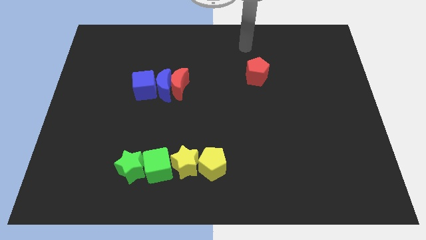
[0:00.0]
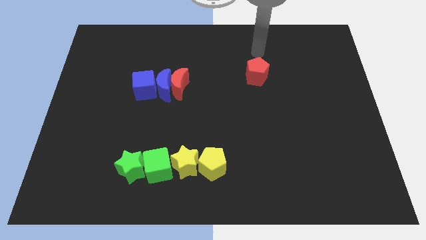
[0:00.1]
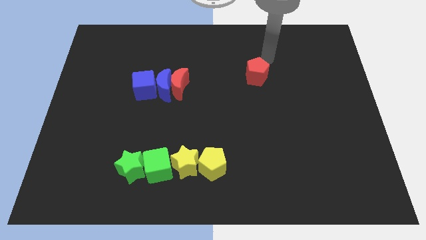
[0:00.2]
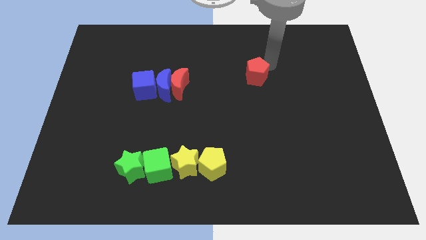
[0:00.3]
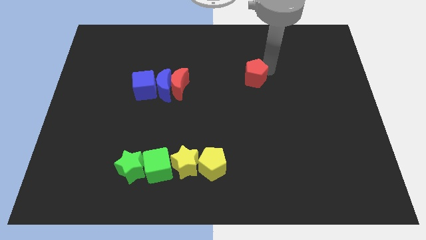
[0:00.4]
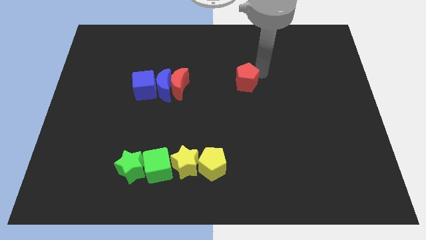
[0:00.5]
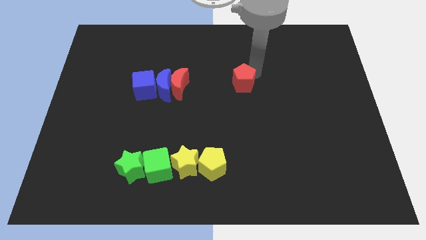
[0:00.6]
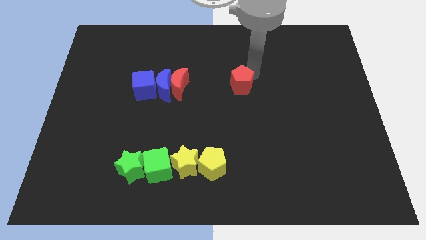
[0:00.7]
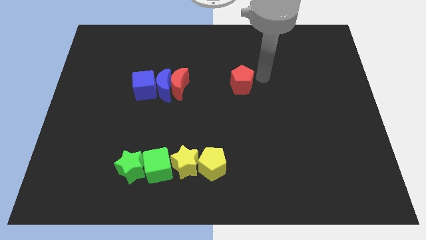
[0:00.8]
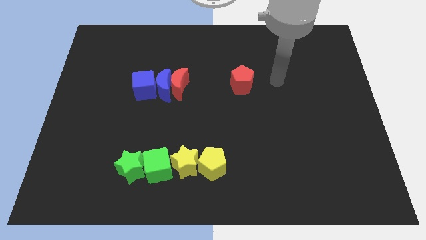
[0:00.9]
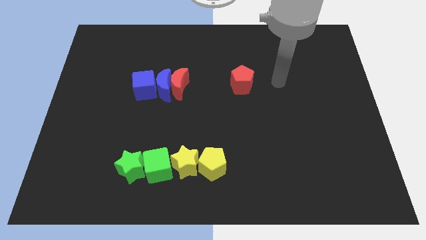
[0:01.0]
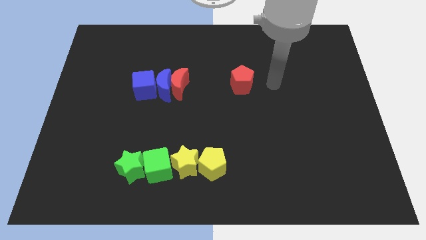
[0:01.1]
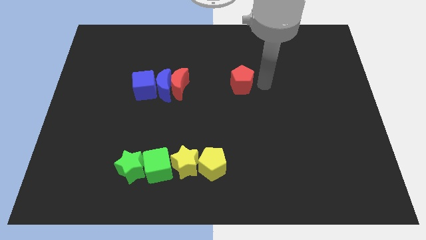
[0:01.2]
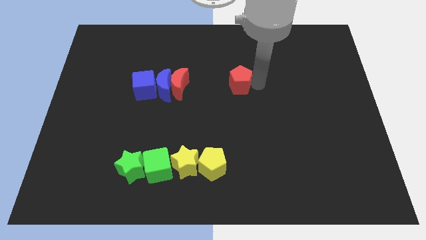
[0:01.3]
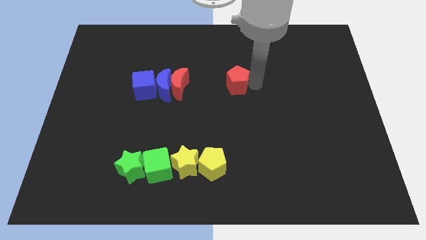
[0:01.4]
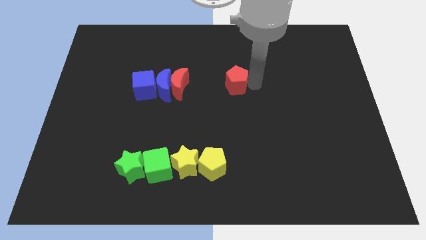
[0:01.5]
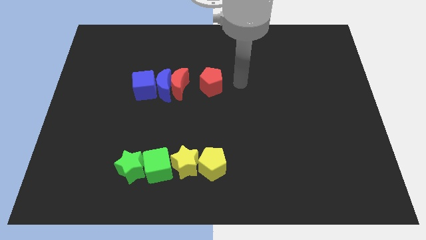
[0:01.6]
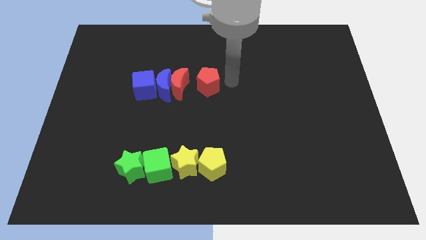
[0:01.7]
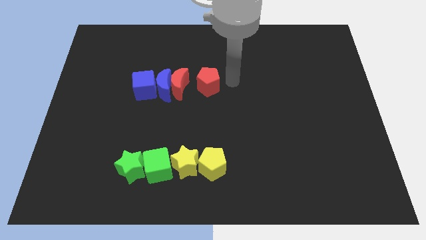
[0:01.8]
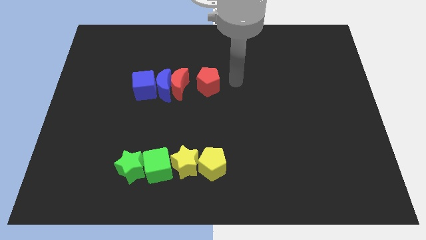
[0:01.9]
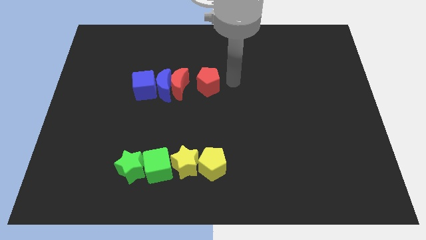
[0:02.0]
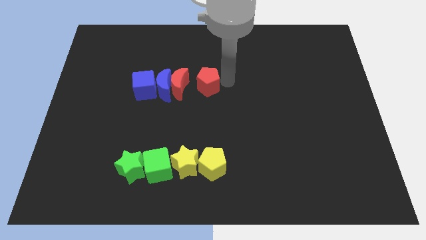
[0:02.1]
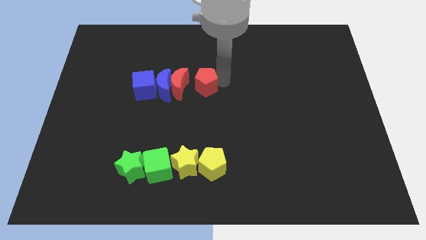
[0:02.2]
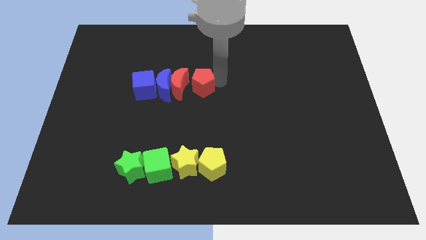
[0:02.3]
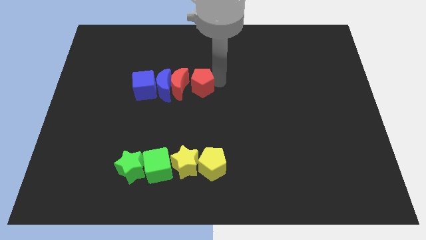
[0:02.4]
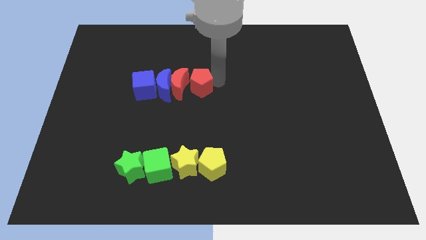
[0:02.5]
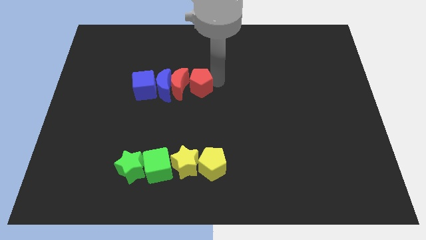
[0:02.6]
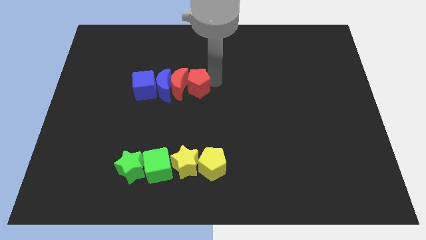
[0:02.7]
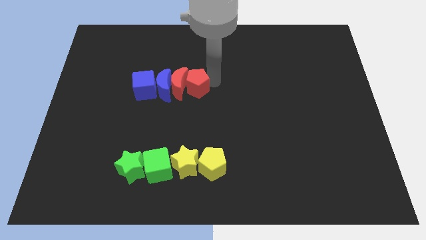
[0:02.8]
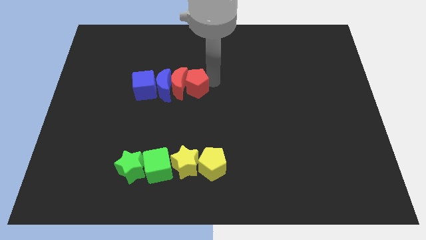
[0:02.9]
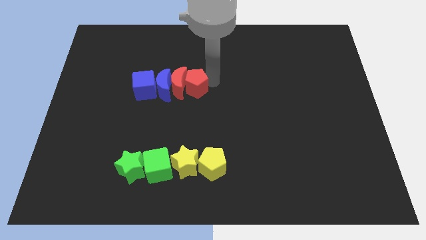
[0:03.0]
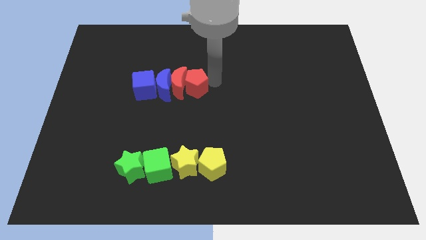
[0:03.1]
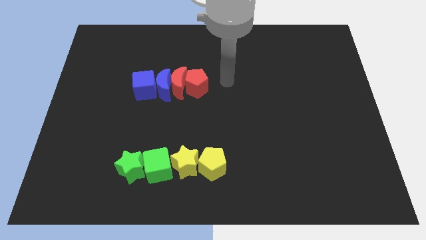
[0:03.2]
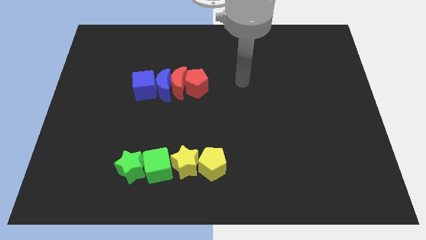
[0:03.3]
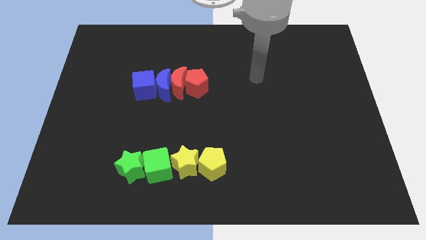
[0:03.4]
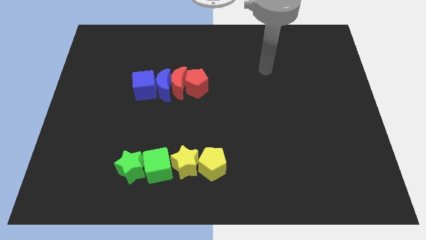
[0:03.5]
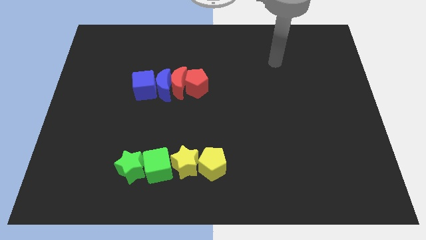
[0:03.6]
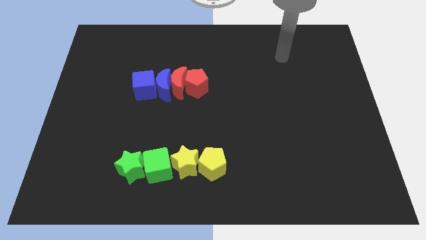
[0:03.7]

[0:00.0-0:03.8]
push the red pentagon into the red crescent

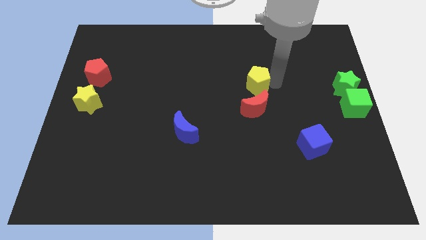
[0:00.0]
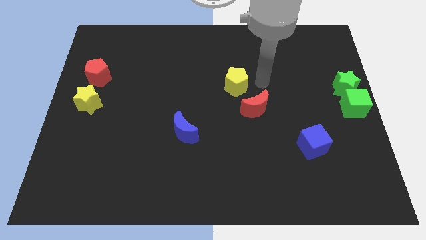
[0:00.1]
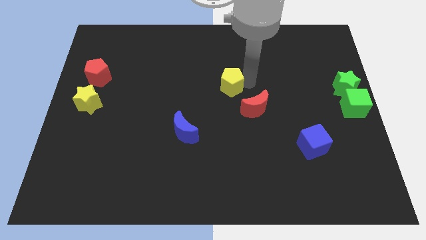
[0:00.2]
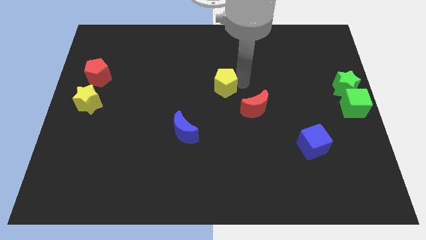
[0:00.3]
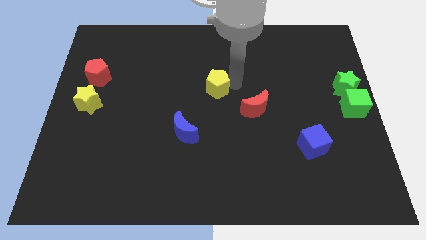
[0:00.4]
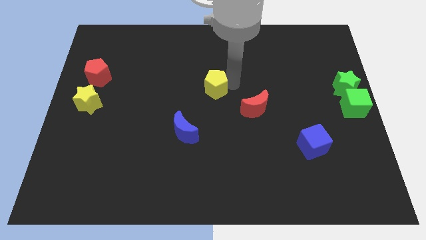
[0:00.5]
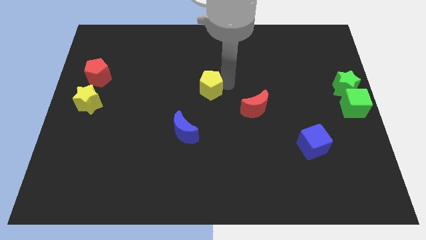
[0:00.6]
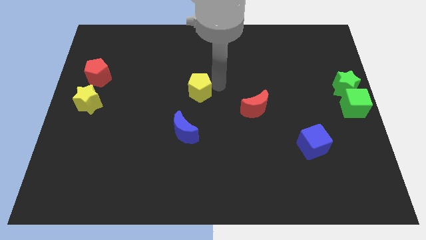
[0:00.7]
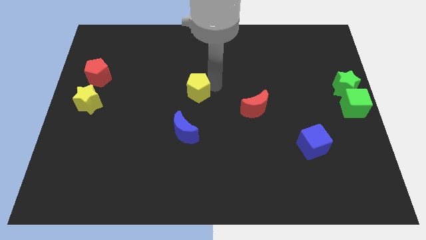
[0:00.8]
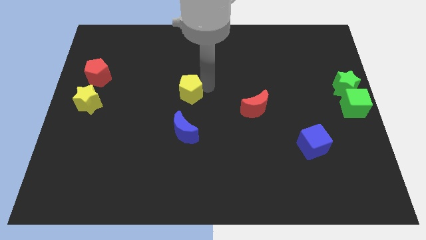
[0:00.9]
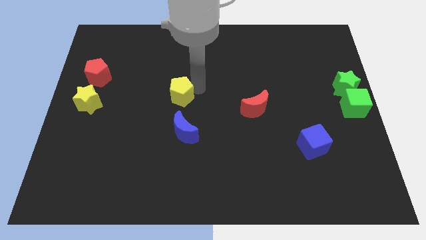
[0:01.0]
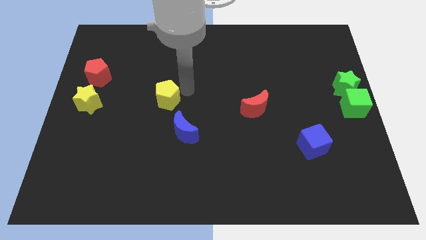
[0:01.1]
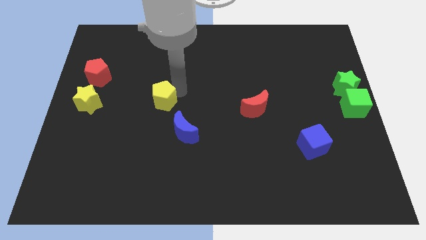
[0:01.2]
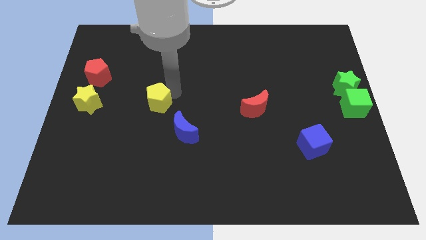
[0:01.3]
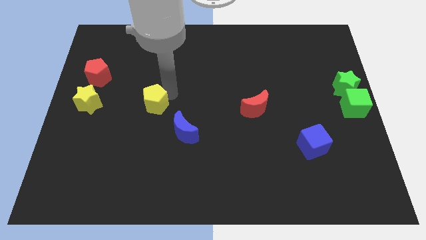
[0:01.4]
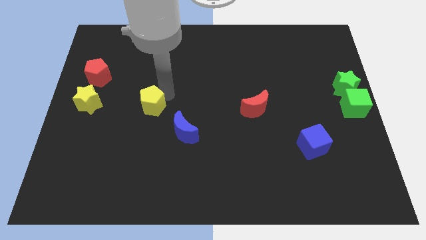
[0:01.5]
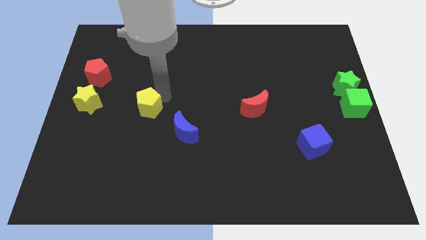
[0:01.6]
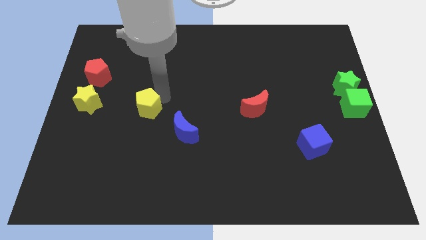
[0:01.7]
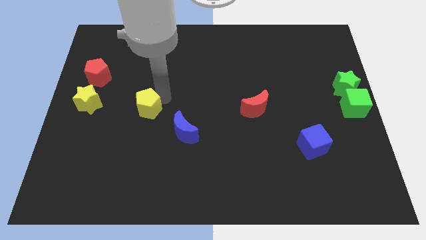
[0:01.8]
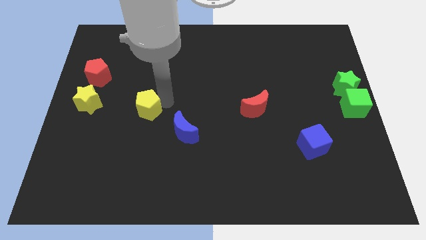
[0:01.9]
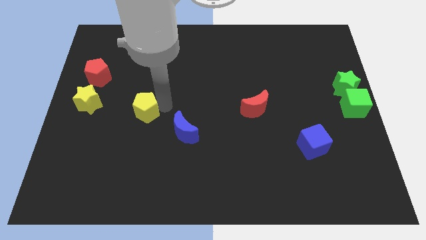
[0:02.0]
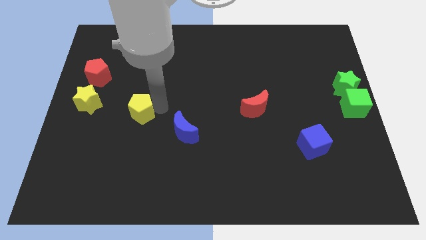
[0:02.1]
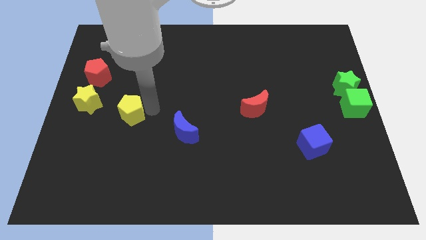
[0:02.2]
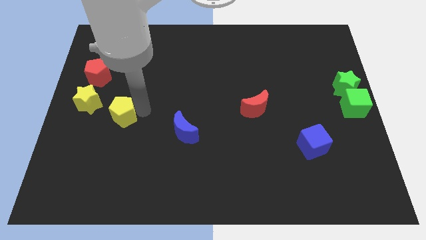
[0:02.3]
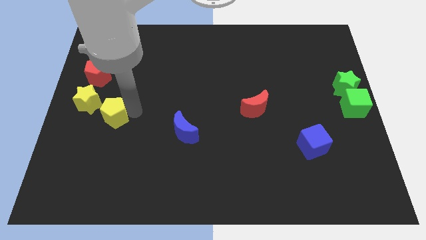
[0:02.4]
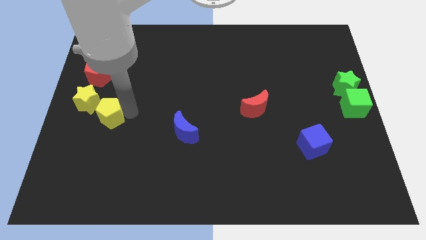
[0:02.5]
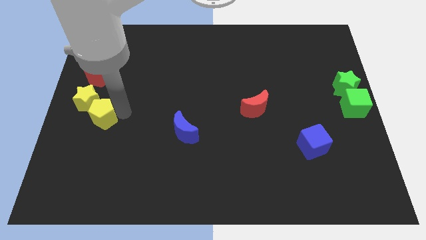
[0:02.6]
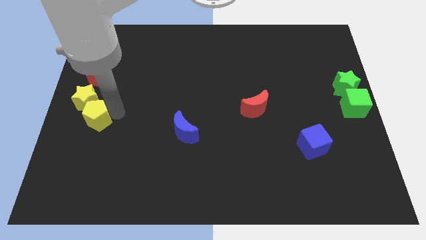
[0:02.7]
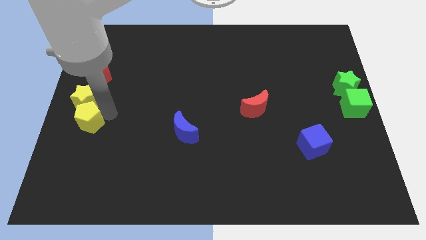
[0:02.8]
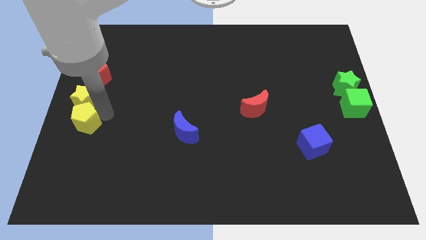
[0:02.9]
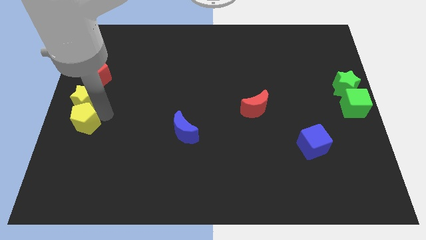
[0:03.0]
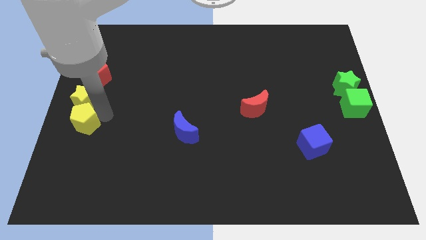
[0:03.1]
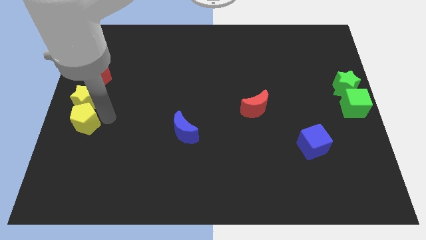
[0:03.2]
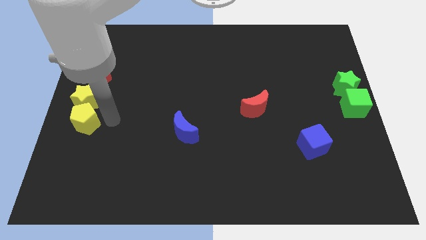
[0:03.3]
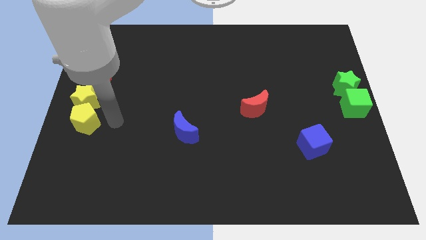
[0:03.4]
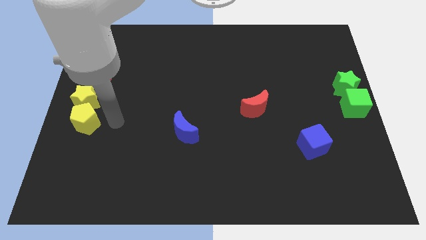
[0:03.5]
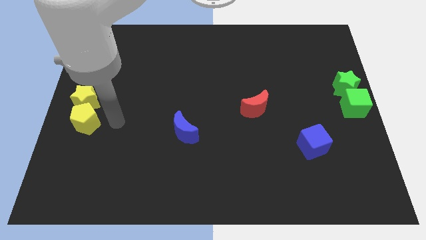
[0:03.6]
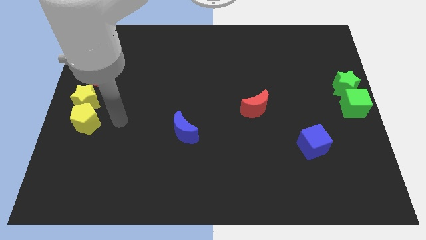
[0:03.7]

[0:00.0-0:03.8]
push the yellow pentagon below the yellow star

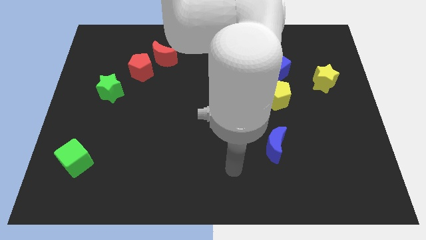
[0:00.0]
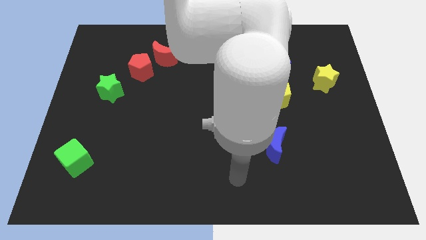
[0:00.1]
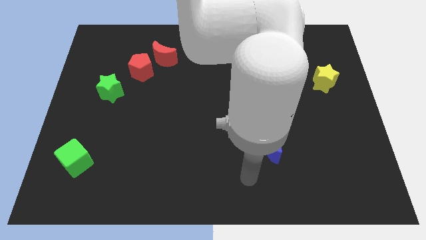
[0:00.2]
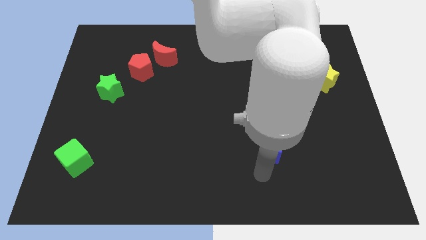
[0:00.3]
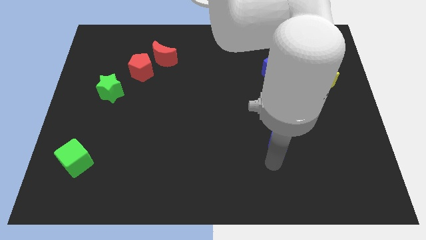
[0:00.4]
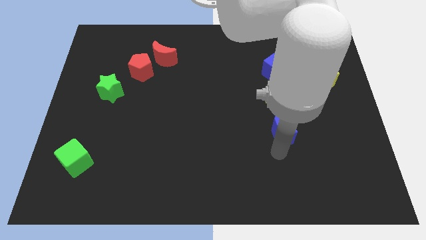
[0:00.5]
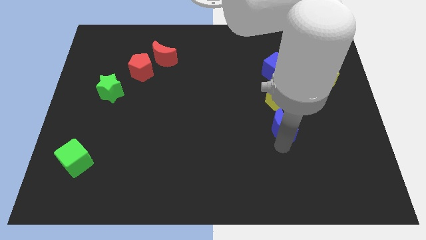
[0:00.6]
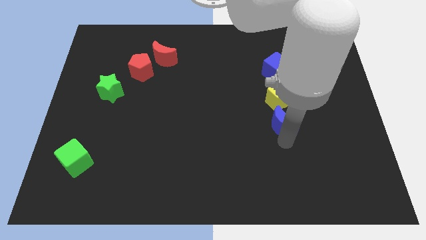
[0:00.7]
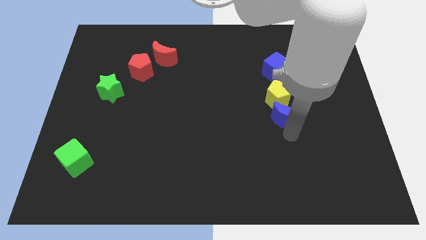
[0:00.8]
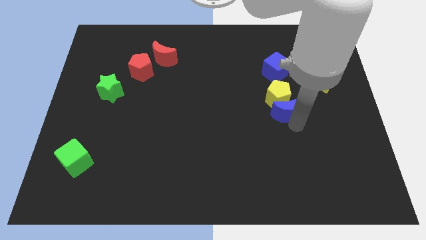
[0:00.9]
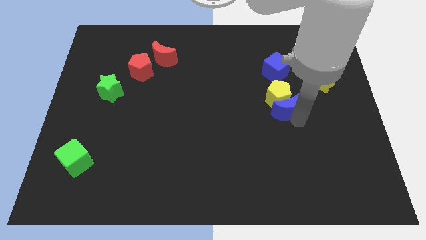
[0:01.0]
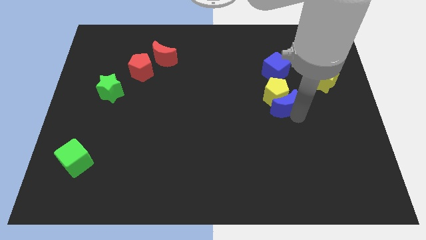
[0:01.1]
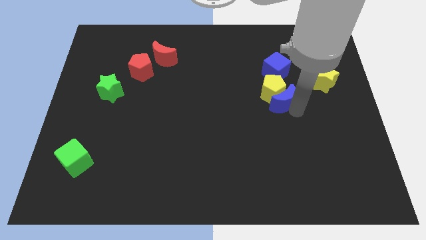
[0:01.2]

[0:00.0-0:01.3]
push the blue crescent into the bottom side of the yellow pentagon
